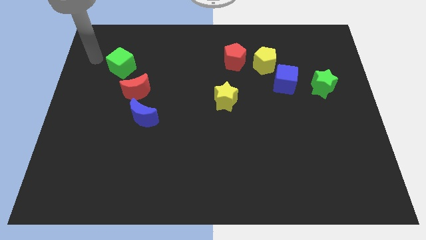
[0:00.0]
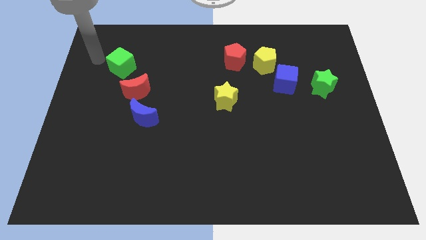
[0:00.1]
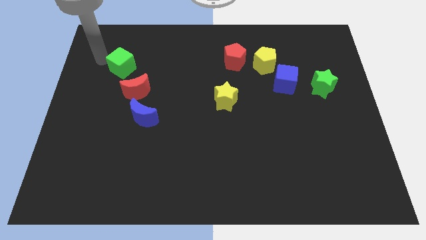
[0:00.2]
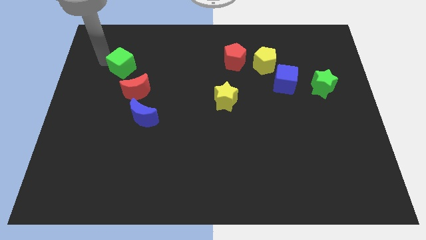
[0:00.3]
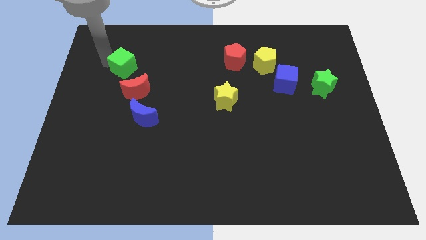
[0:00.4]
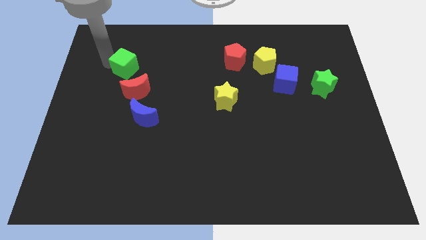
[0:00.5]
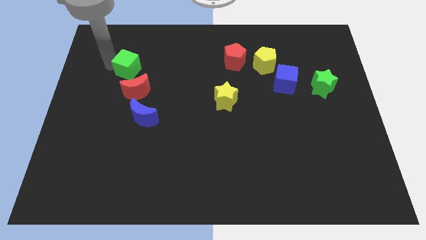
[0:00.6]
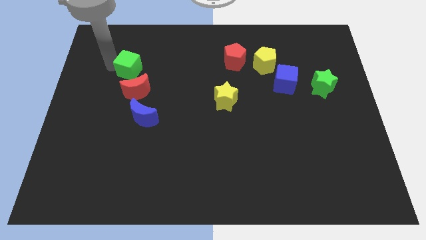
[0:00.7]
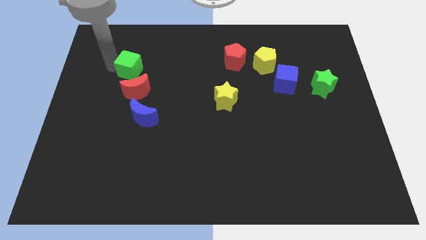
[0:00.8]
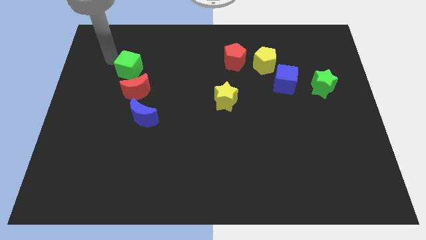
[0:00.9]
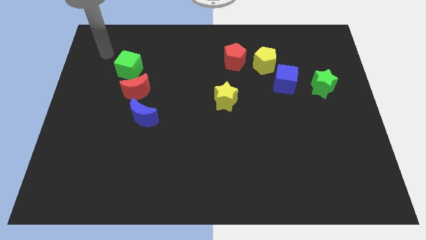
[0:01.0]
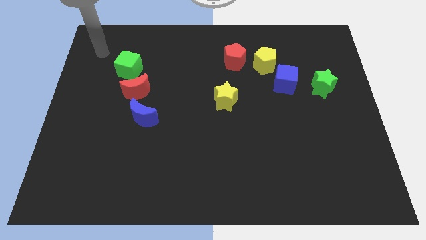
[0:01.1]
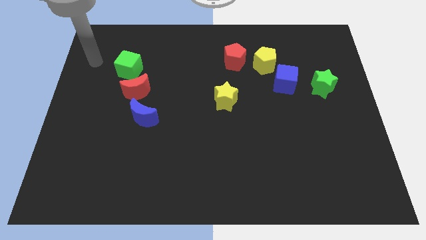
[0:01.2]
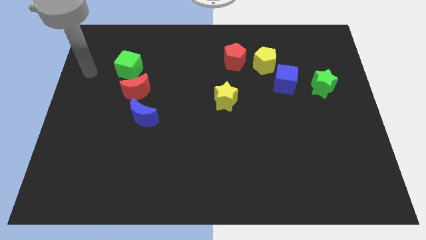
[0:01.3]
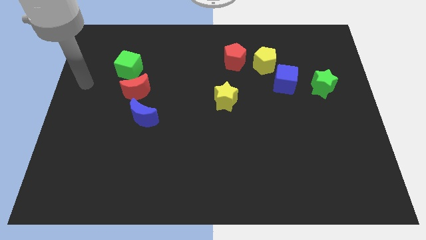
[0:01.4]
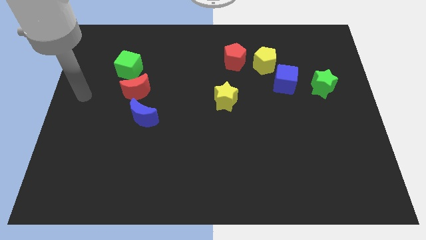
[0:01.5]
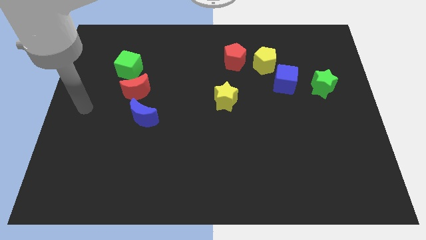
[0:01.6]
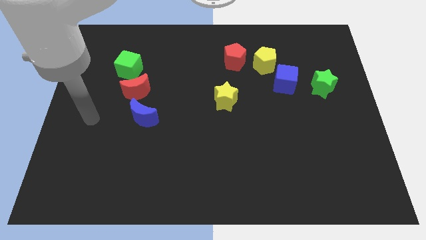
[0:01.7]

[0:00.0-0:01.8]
place the green cube above the red crescent

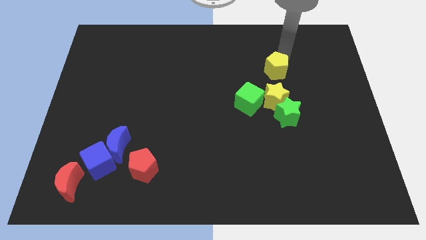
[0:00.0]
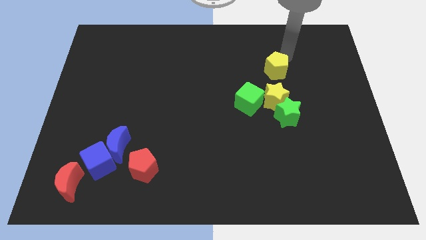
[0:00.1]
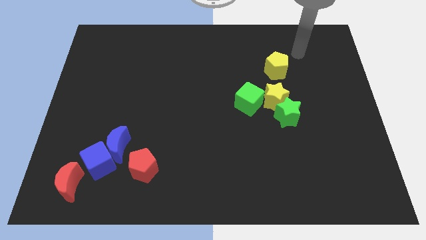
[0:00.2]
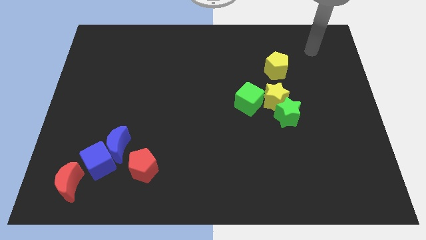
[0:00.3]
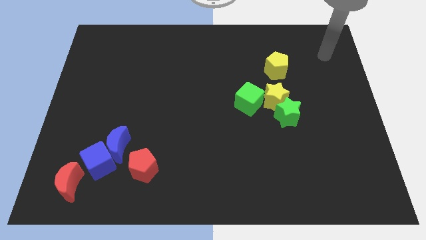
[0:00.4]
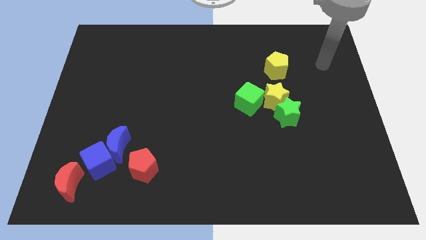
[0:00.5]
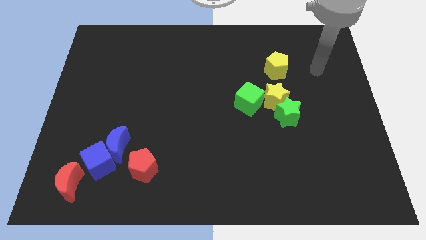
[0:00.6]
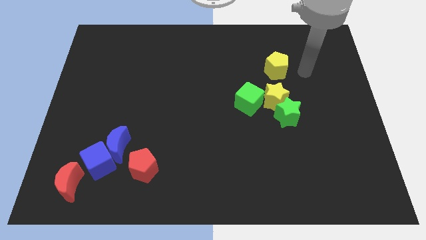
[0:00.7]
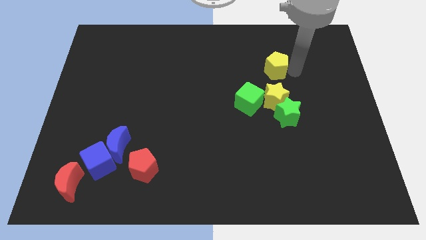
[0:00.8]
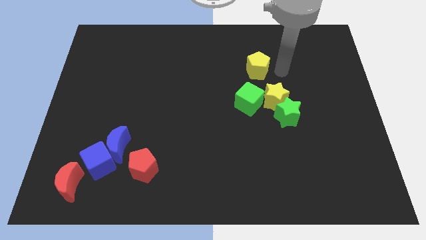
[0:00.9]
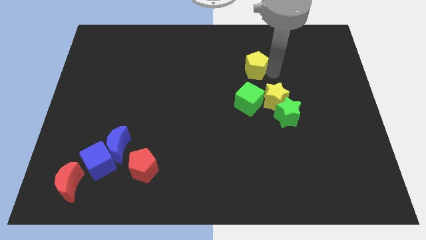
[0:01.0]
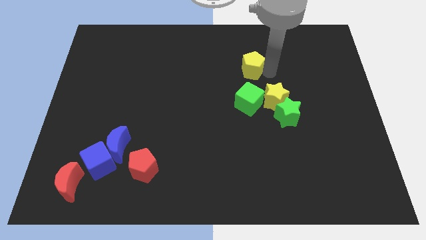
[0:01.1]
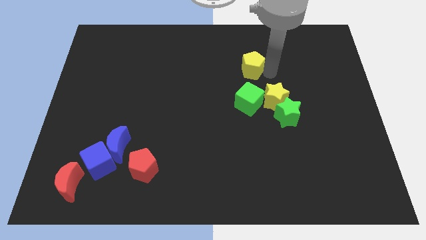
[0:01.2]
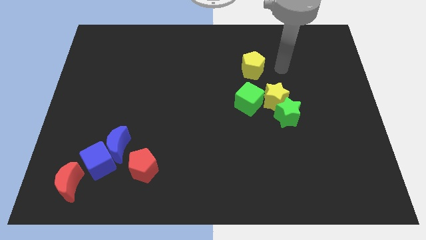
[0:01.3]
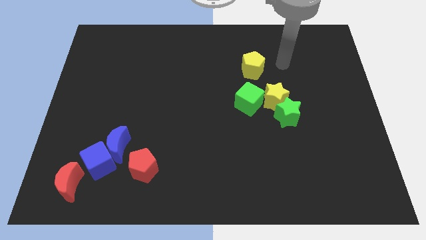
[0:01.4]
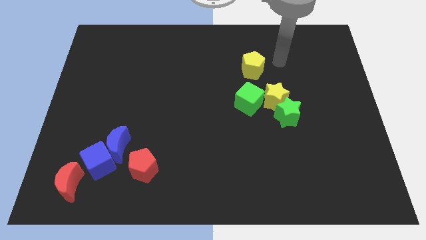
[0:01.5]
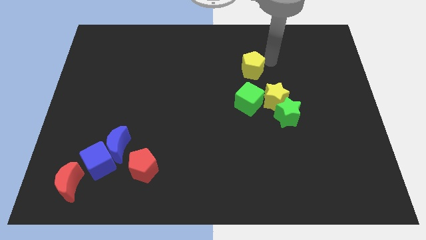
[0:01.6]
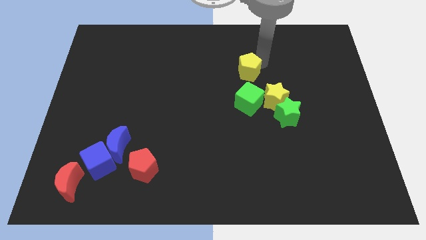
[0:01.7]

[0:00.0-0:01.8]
move the yellow pentagon to the top side of the green cube

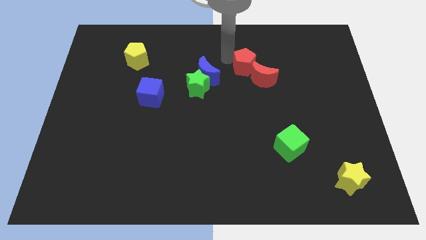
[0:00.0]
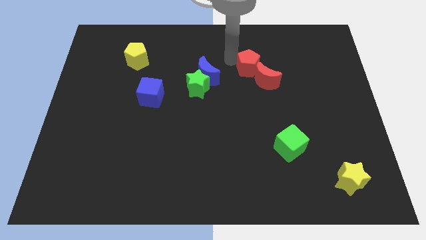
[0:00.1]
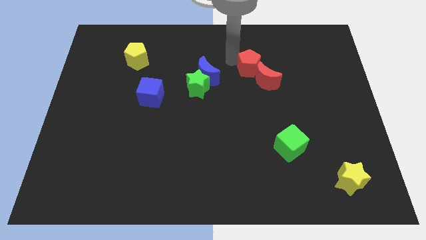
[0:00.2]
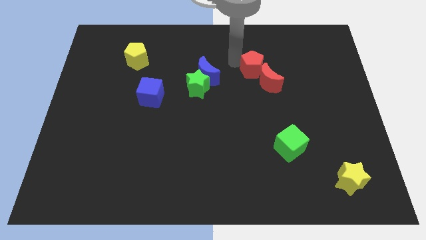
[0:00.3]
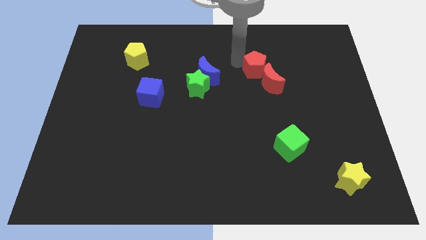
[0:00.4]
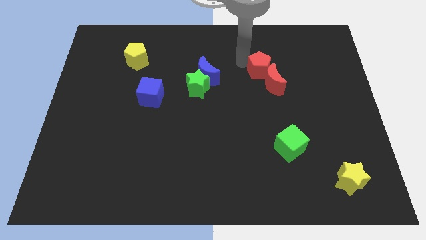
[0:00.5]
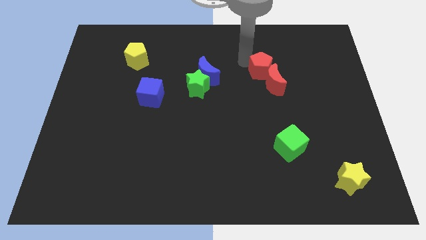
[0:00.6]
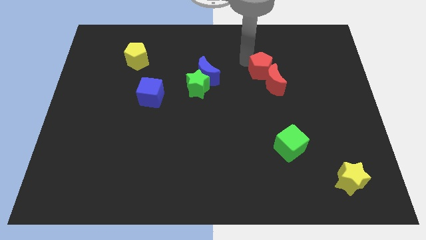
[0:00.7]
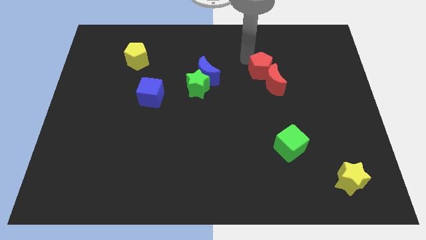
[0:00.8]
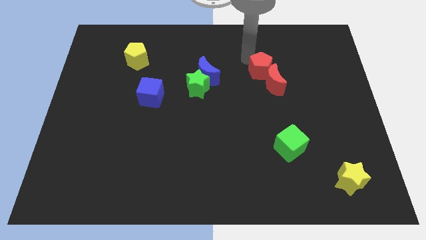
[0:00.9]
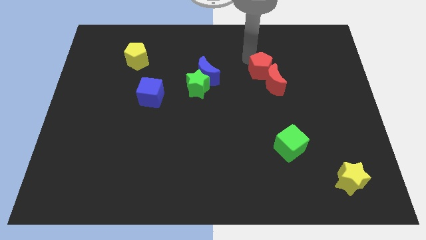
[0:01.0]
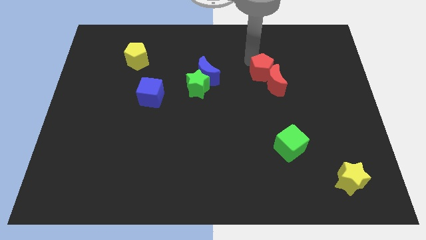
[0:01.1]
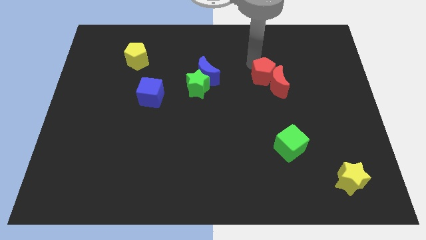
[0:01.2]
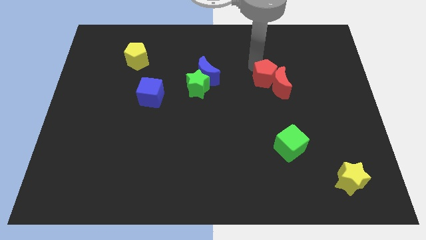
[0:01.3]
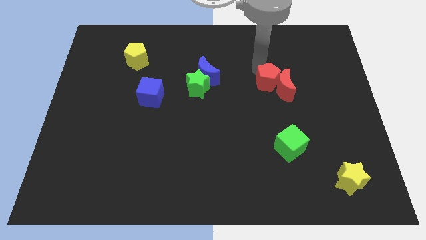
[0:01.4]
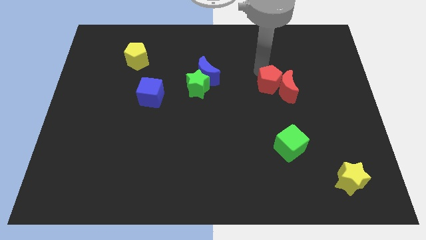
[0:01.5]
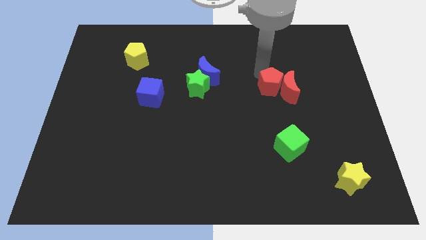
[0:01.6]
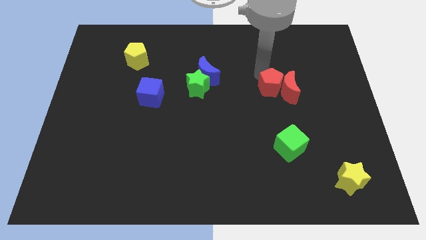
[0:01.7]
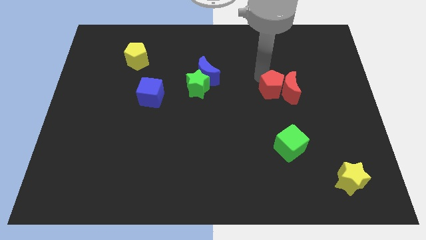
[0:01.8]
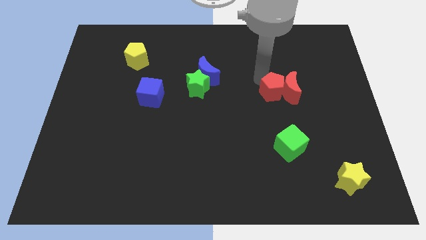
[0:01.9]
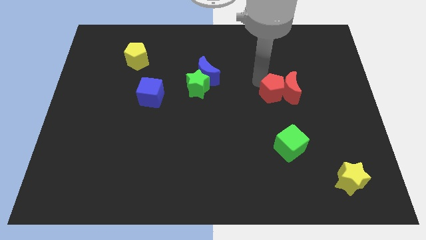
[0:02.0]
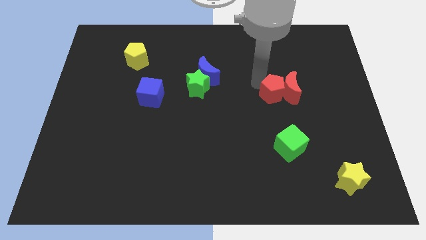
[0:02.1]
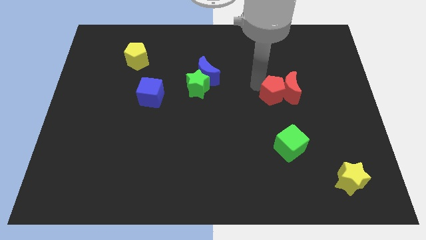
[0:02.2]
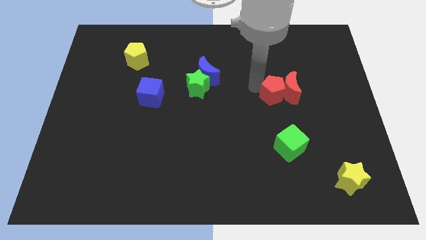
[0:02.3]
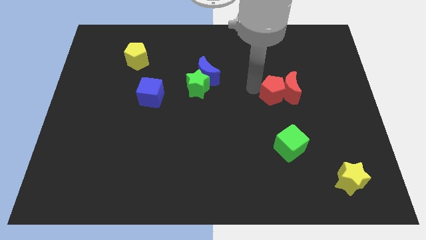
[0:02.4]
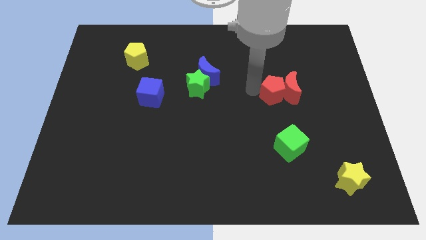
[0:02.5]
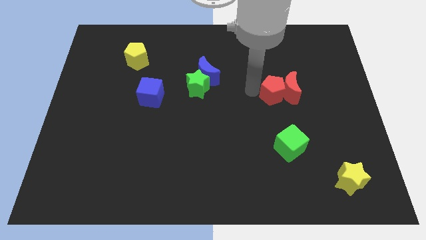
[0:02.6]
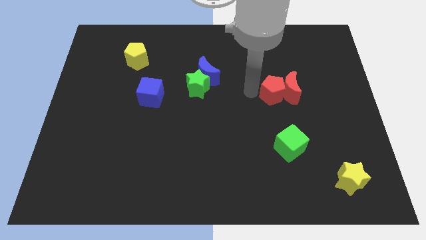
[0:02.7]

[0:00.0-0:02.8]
move the red pentagon to the left side of the red crescent

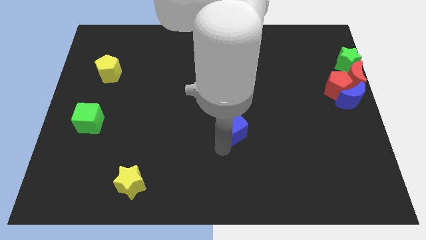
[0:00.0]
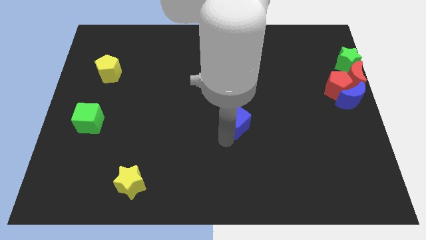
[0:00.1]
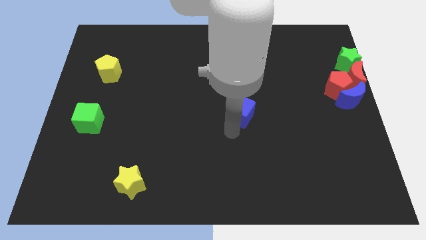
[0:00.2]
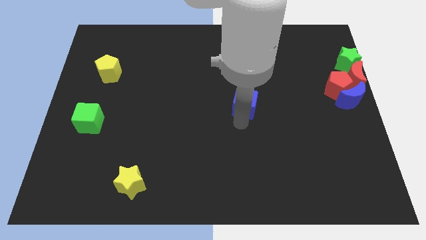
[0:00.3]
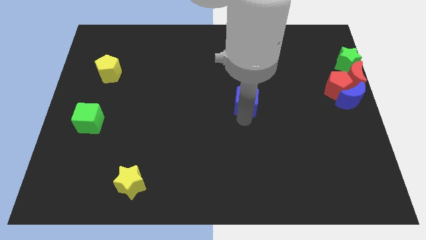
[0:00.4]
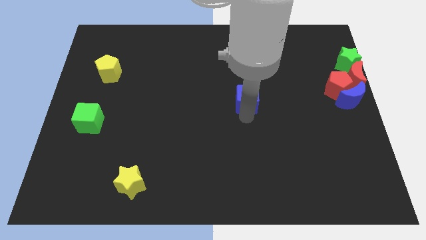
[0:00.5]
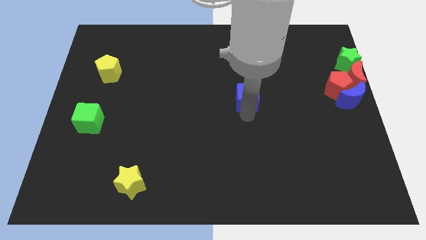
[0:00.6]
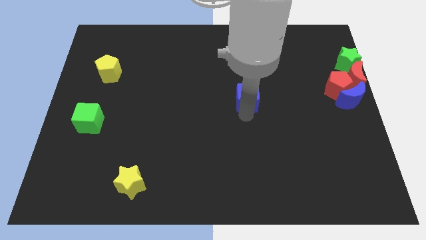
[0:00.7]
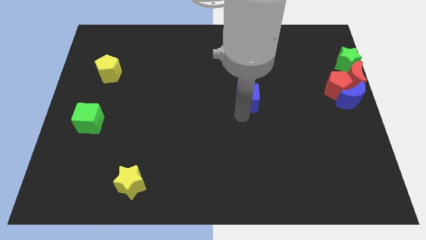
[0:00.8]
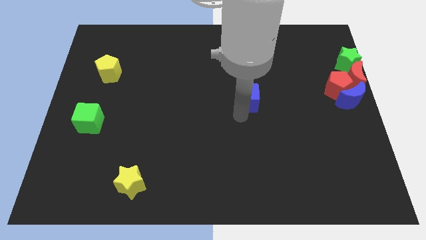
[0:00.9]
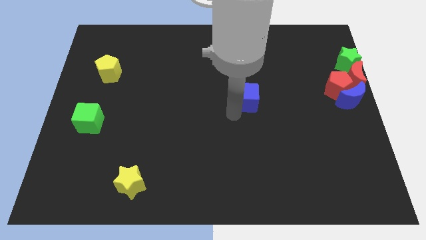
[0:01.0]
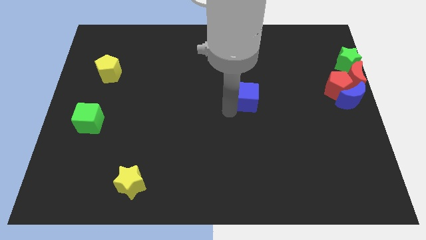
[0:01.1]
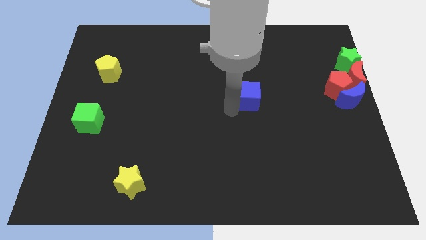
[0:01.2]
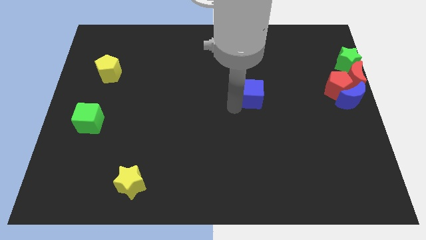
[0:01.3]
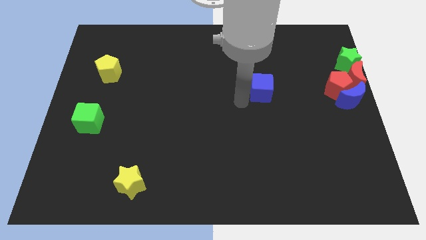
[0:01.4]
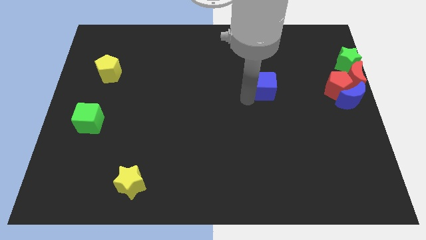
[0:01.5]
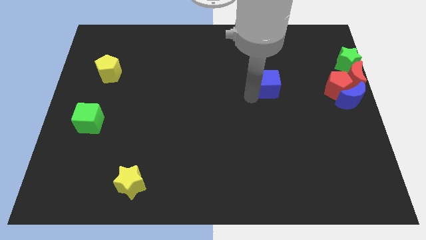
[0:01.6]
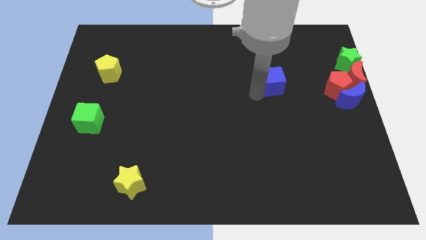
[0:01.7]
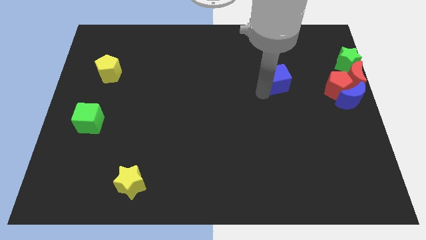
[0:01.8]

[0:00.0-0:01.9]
move the blue cube to the left of the red pentagon

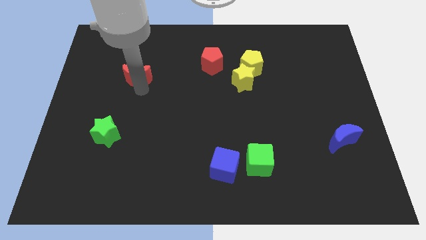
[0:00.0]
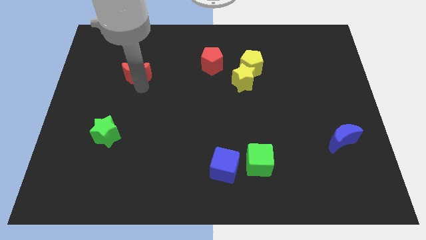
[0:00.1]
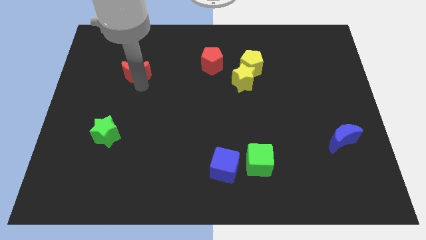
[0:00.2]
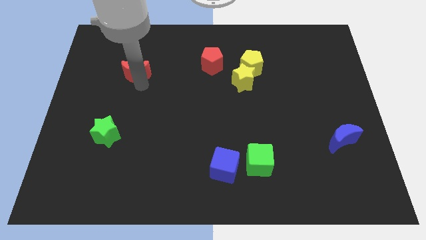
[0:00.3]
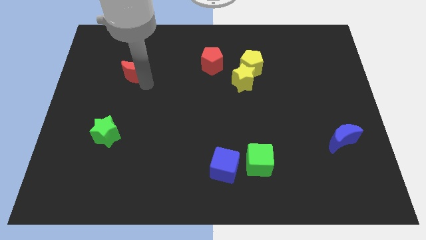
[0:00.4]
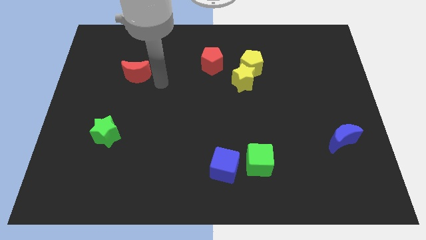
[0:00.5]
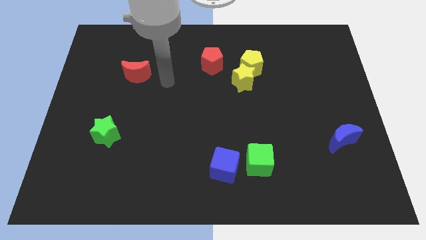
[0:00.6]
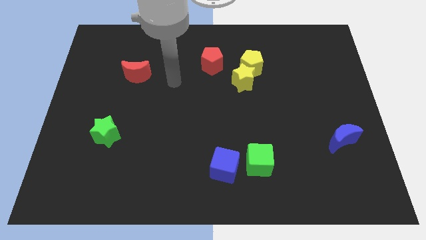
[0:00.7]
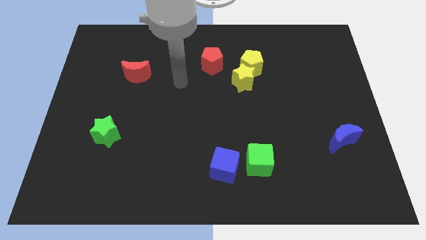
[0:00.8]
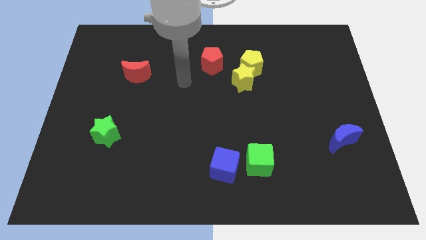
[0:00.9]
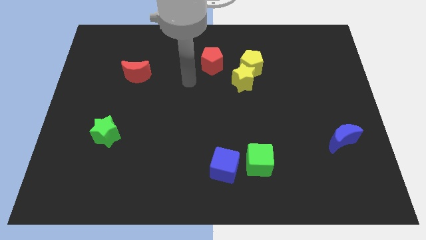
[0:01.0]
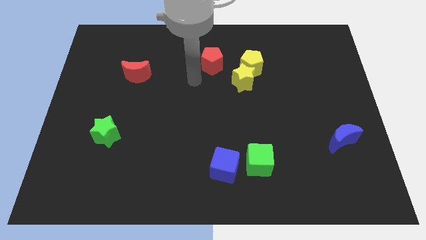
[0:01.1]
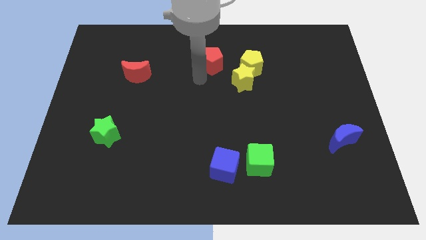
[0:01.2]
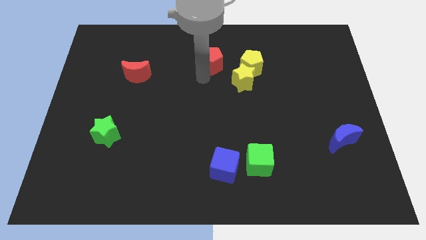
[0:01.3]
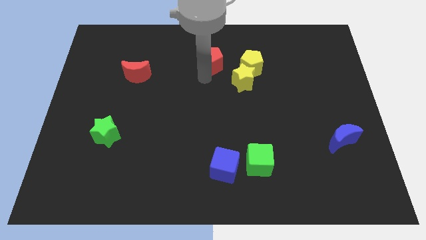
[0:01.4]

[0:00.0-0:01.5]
drag the red moon to the the left of red pentagon
